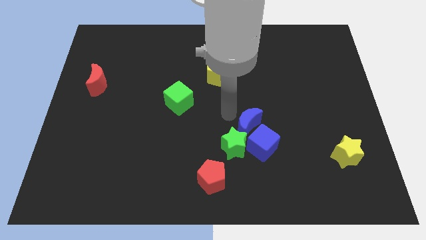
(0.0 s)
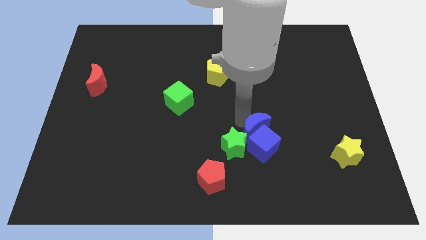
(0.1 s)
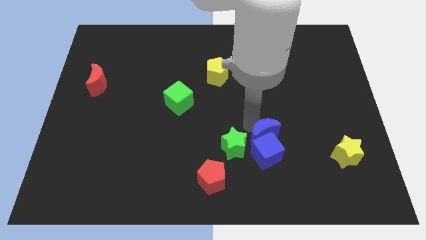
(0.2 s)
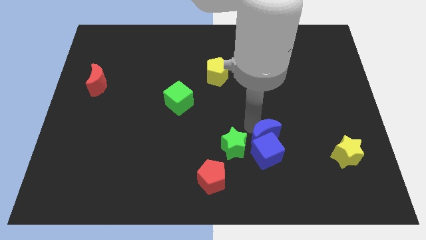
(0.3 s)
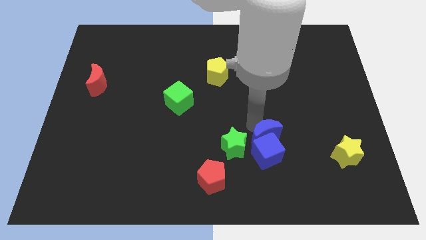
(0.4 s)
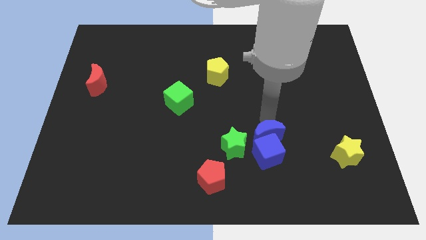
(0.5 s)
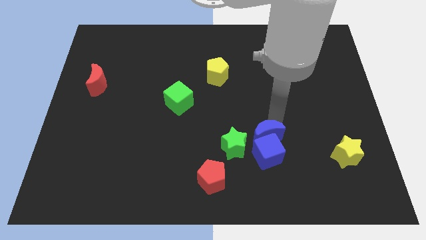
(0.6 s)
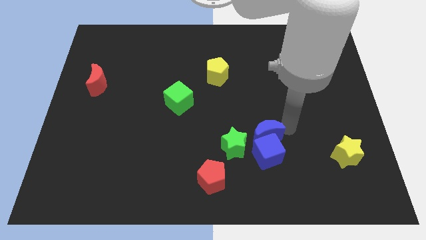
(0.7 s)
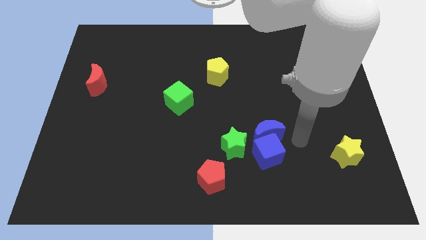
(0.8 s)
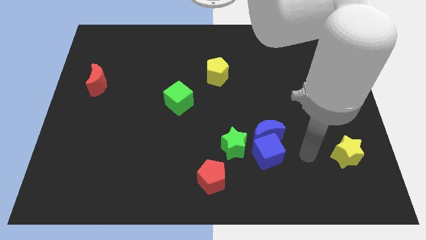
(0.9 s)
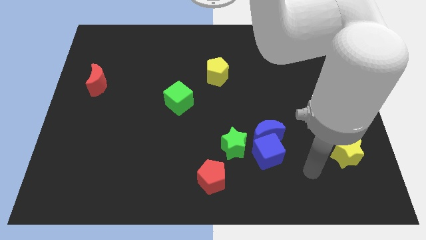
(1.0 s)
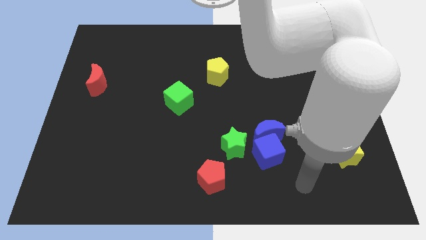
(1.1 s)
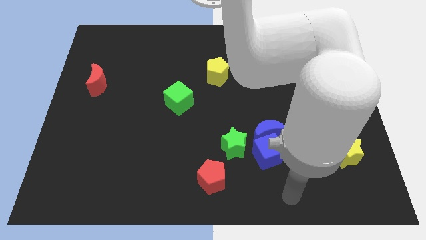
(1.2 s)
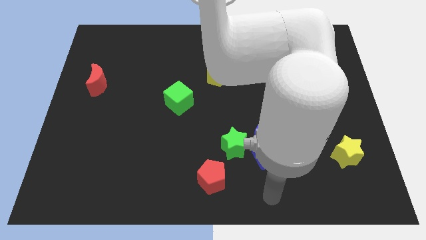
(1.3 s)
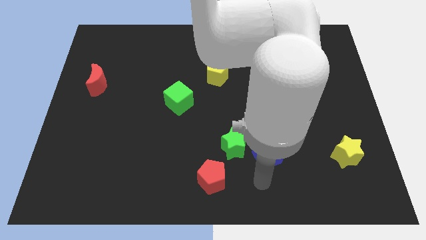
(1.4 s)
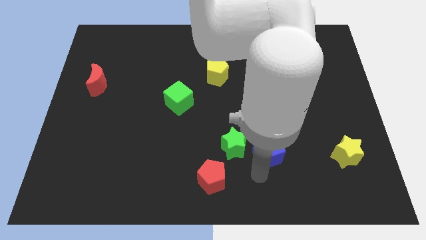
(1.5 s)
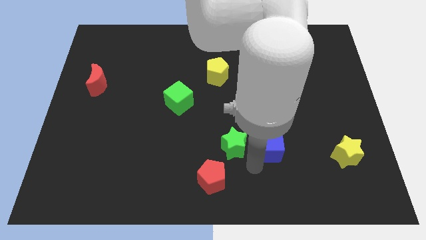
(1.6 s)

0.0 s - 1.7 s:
push the blue crescent into the blue cube

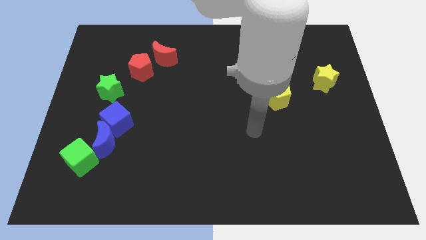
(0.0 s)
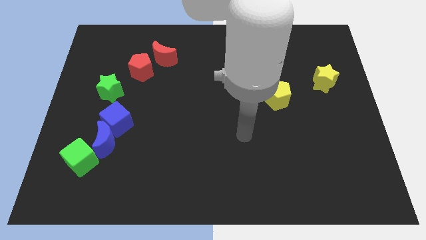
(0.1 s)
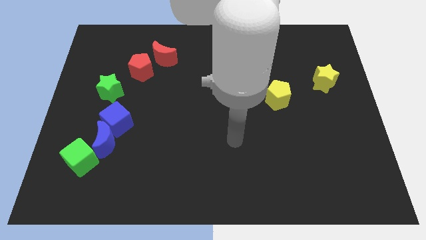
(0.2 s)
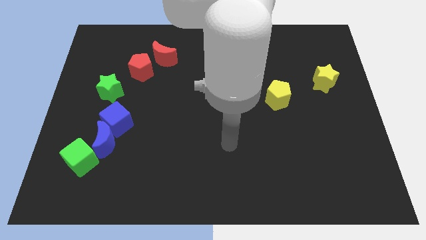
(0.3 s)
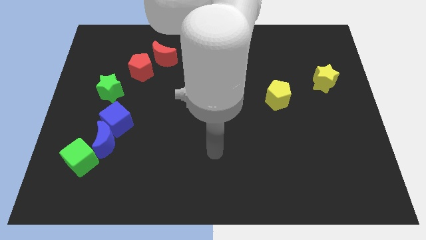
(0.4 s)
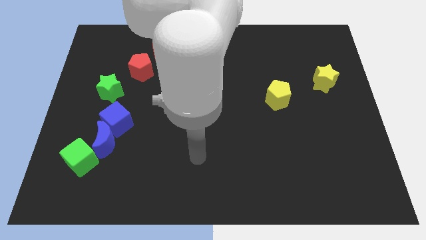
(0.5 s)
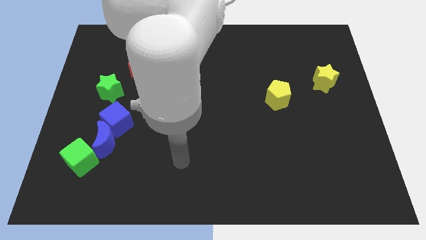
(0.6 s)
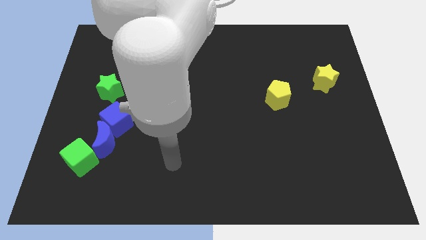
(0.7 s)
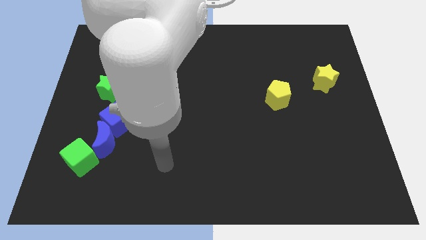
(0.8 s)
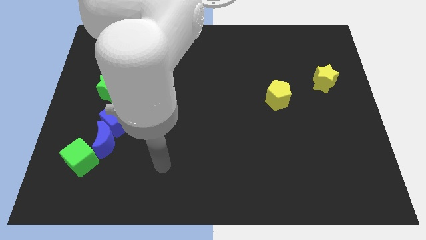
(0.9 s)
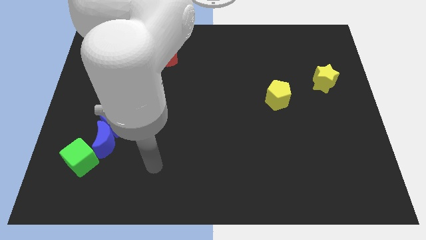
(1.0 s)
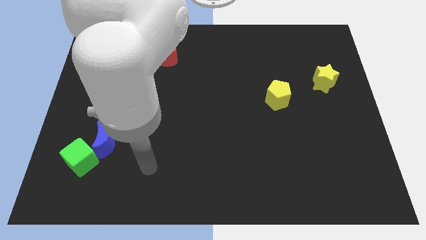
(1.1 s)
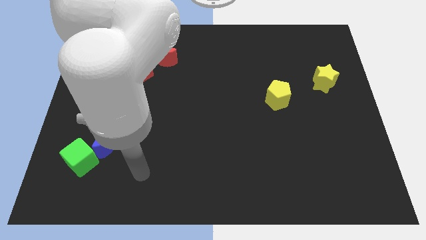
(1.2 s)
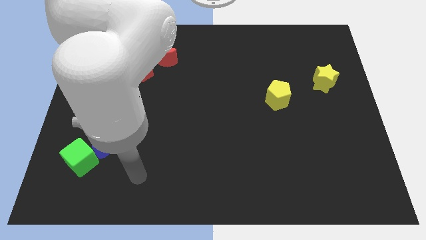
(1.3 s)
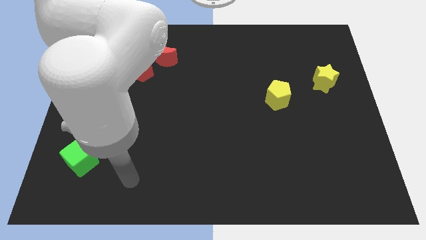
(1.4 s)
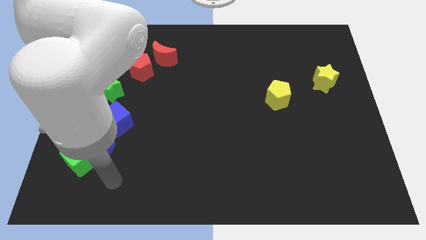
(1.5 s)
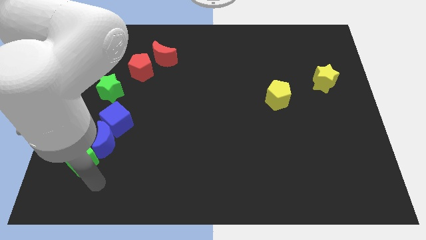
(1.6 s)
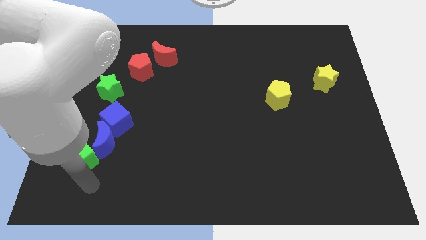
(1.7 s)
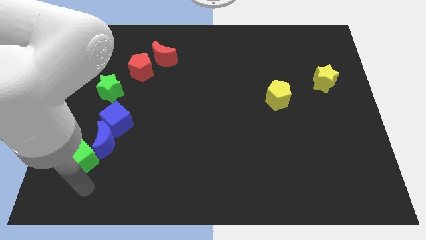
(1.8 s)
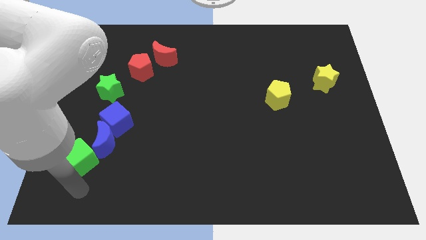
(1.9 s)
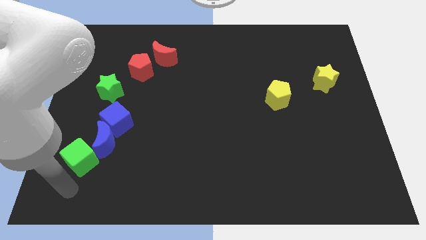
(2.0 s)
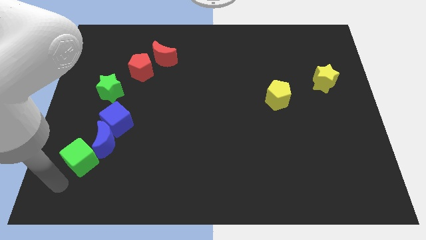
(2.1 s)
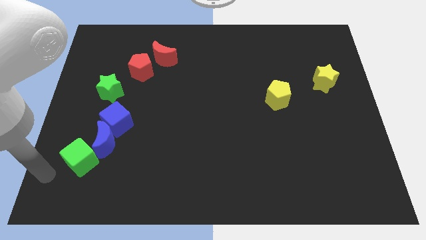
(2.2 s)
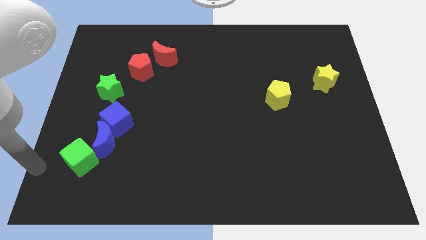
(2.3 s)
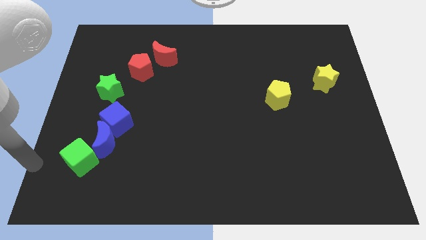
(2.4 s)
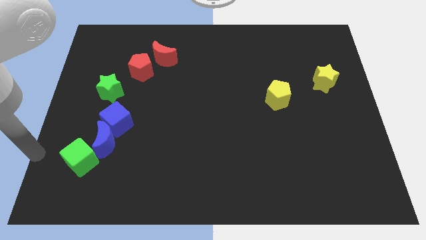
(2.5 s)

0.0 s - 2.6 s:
move arm near green cube

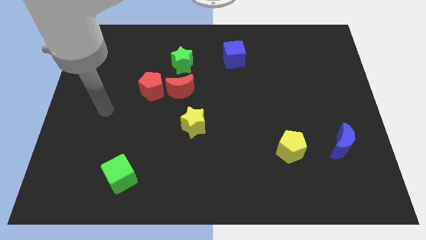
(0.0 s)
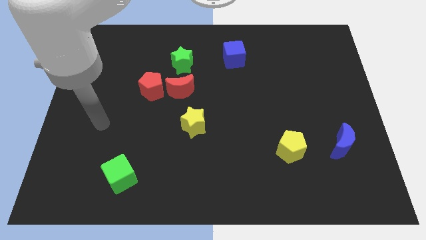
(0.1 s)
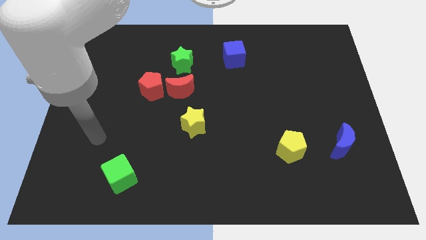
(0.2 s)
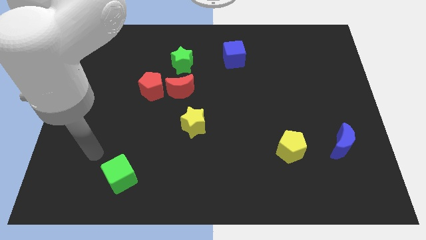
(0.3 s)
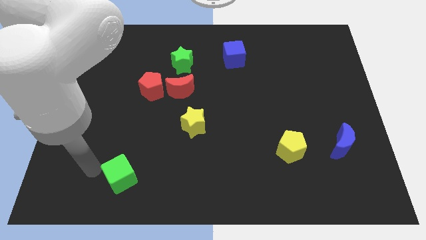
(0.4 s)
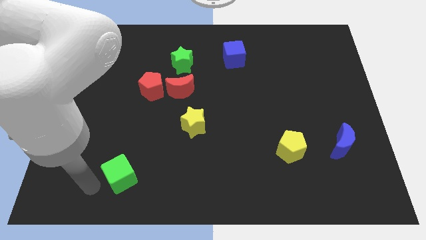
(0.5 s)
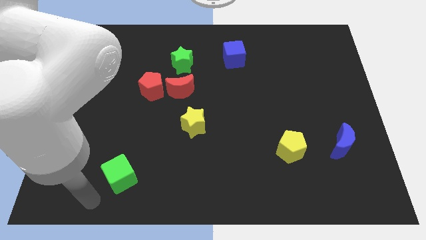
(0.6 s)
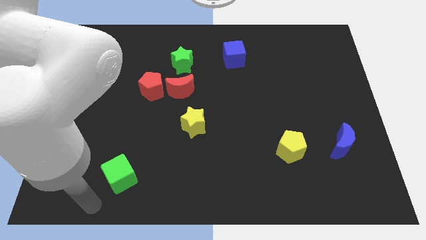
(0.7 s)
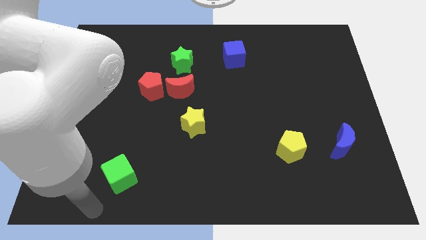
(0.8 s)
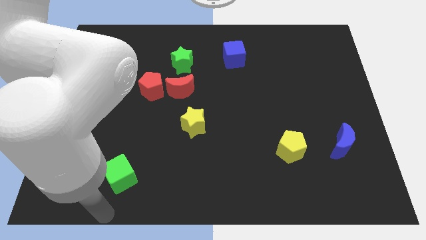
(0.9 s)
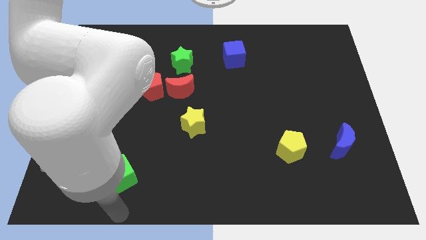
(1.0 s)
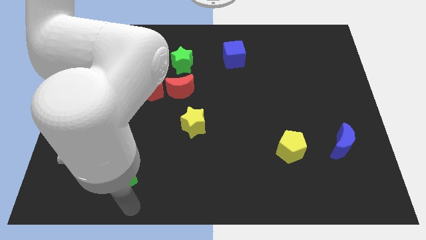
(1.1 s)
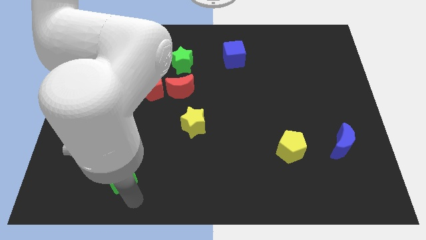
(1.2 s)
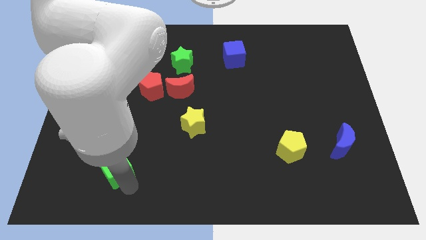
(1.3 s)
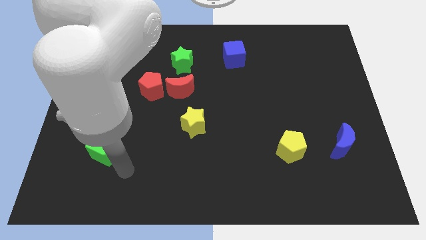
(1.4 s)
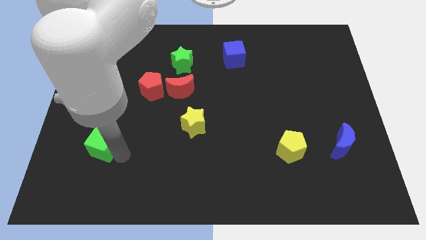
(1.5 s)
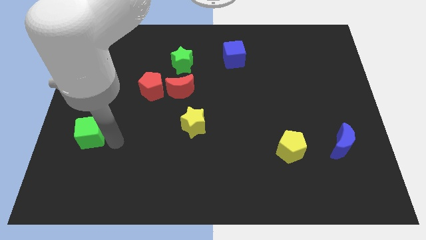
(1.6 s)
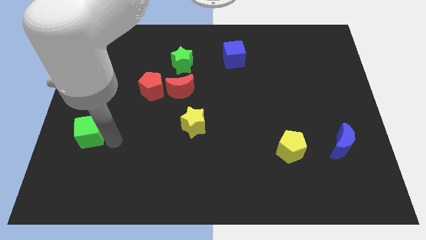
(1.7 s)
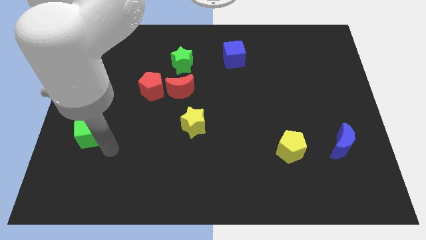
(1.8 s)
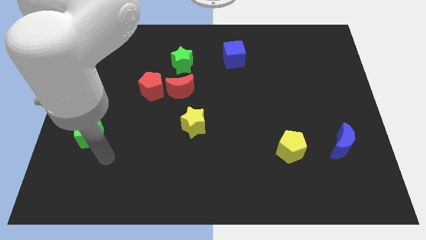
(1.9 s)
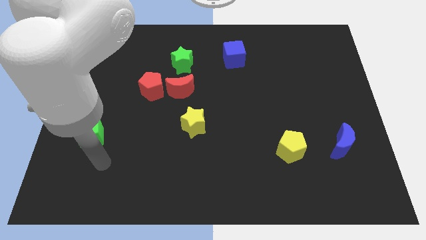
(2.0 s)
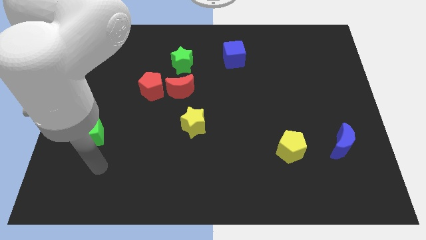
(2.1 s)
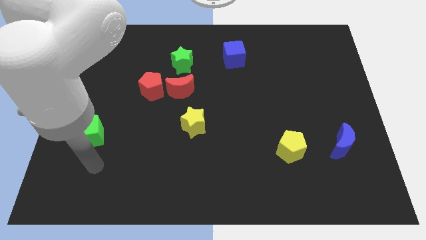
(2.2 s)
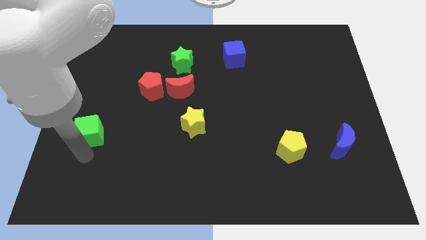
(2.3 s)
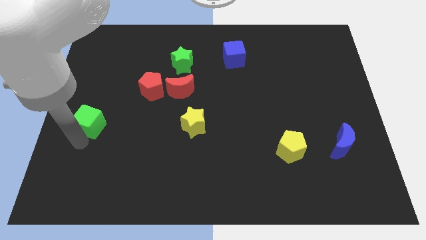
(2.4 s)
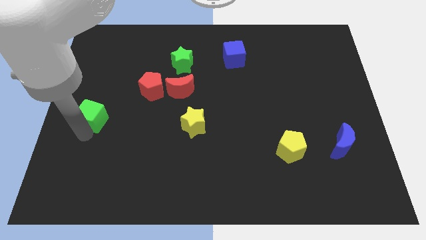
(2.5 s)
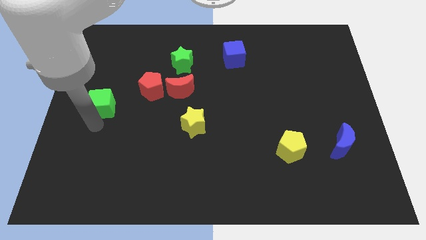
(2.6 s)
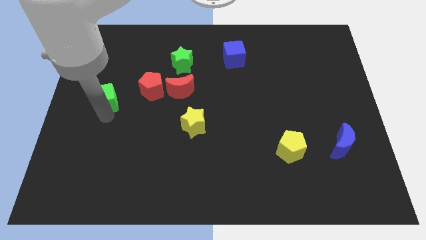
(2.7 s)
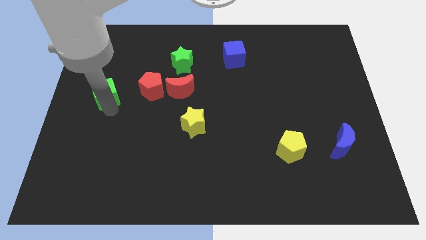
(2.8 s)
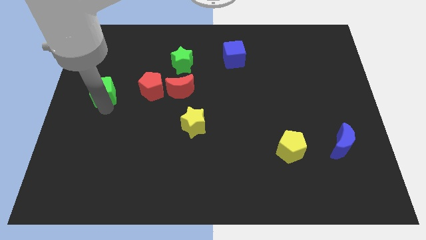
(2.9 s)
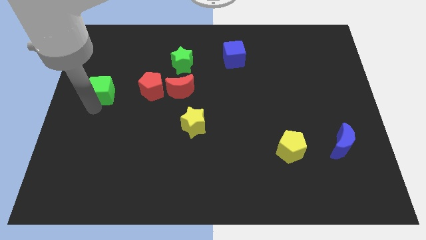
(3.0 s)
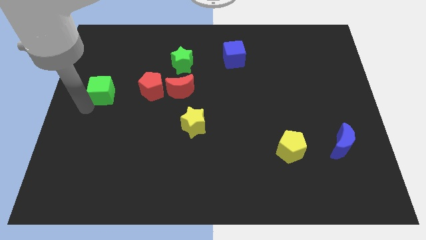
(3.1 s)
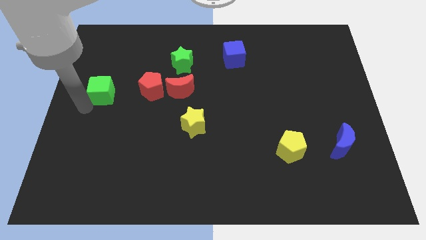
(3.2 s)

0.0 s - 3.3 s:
move the green cube at the left of the horizontal line of red blocks

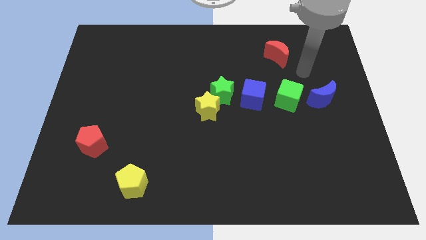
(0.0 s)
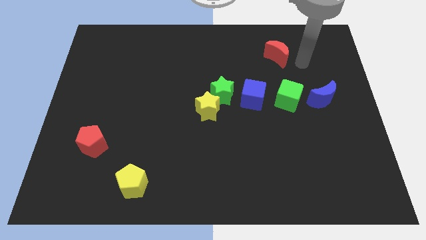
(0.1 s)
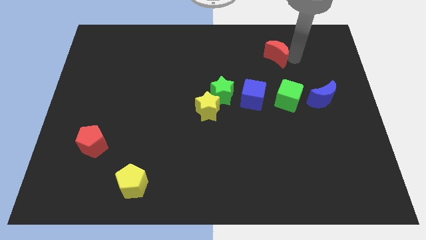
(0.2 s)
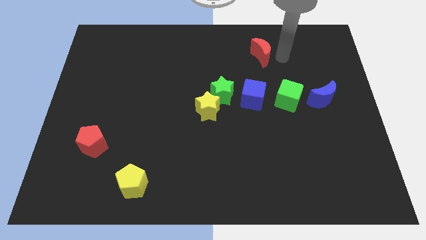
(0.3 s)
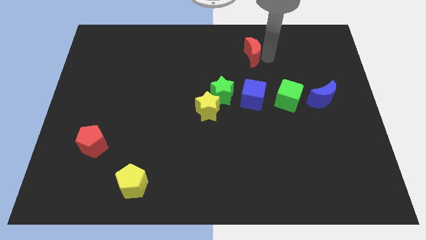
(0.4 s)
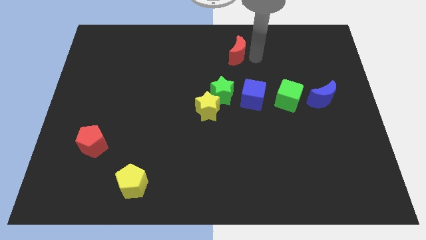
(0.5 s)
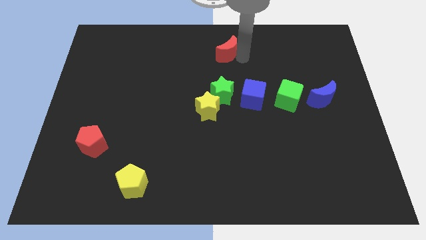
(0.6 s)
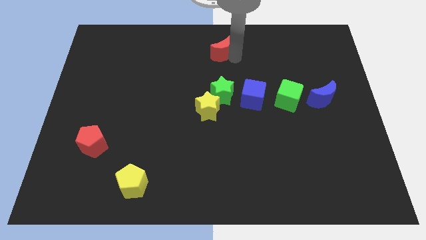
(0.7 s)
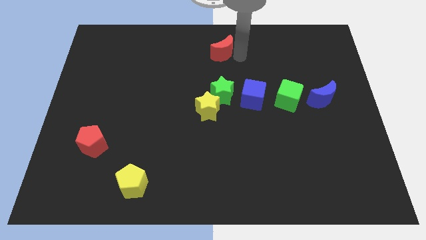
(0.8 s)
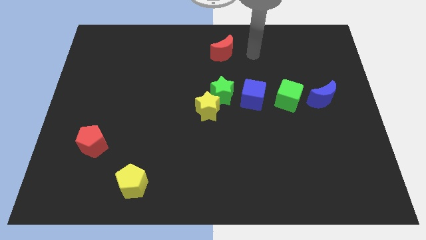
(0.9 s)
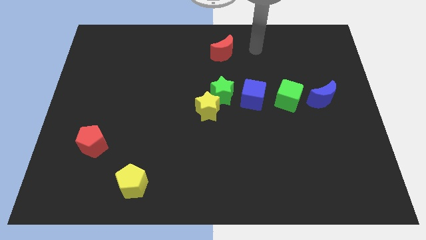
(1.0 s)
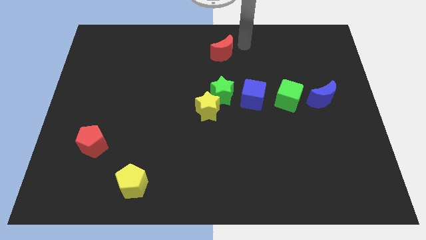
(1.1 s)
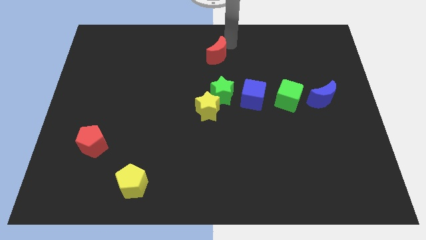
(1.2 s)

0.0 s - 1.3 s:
place red moon on the top of green star
